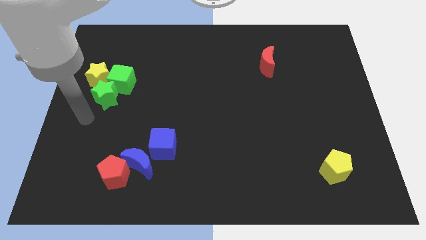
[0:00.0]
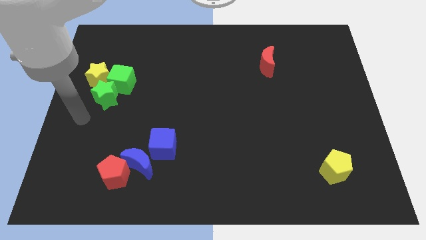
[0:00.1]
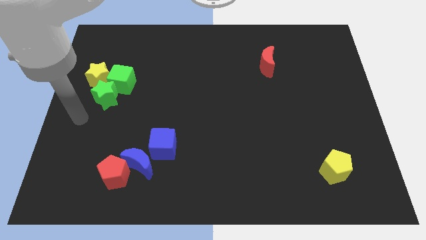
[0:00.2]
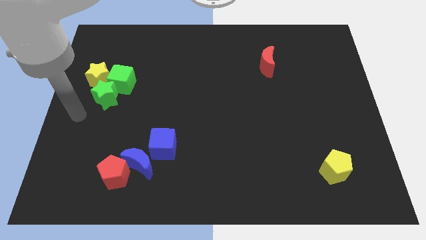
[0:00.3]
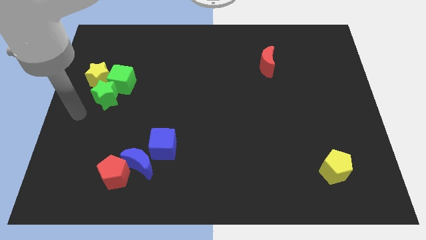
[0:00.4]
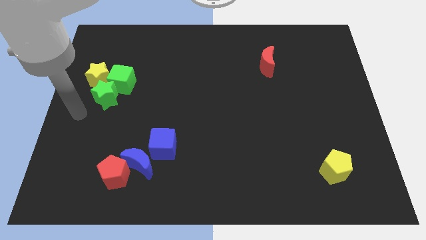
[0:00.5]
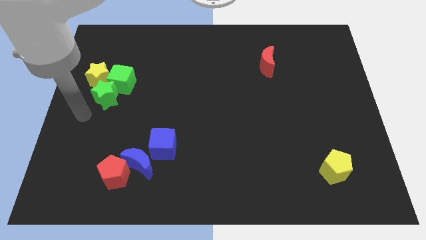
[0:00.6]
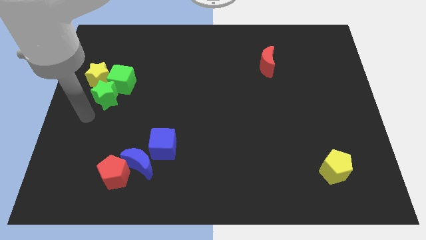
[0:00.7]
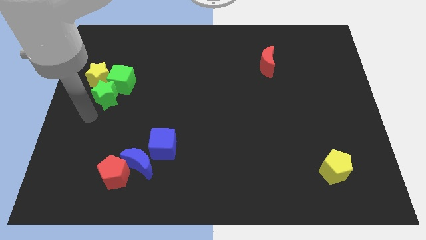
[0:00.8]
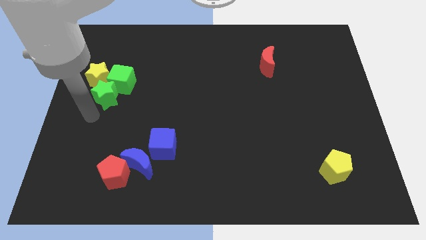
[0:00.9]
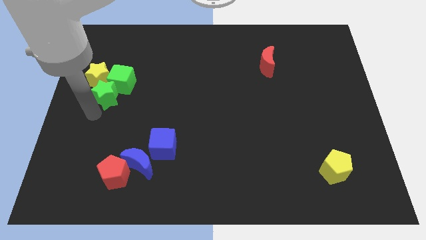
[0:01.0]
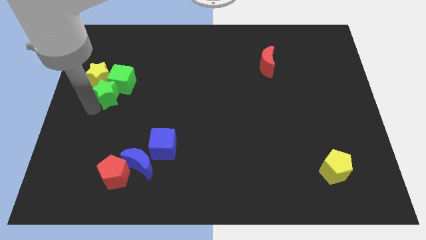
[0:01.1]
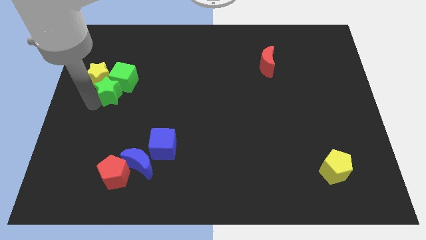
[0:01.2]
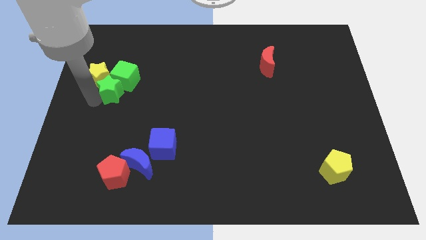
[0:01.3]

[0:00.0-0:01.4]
slide the green star into the green cube

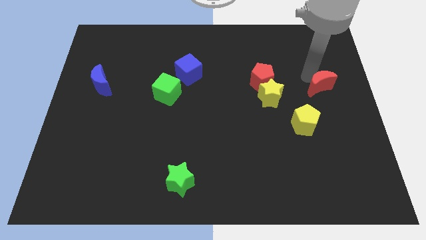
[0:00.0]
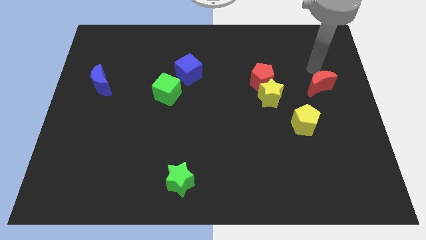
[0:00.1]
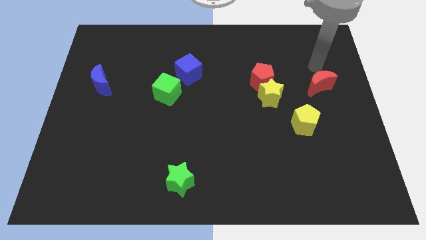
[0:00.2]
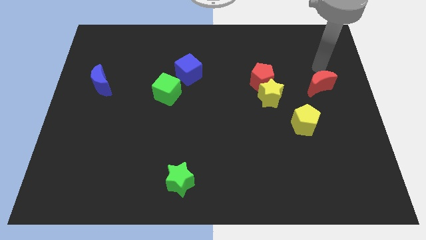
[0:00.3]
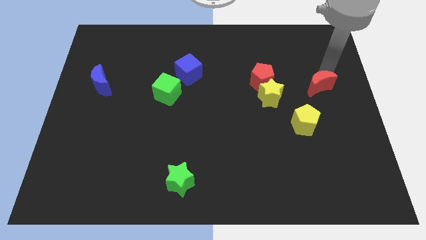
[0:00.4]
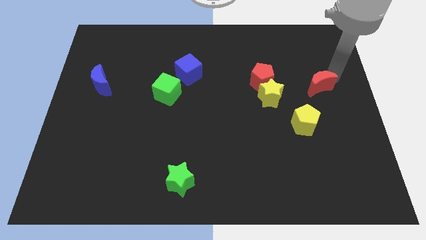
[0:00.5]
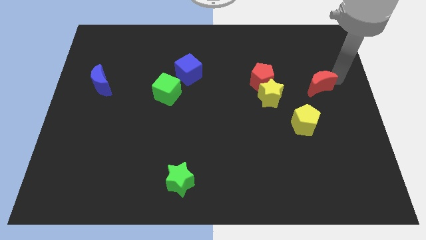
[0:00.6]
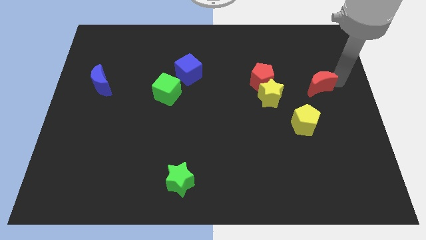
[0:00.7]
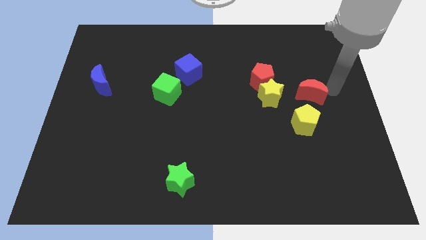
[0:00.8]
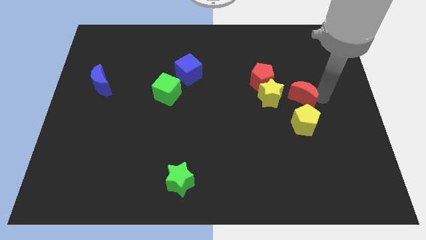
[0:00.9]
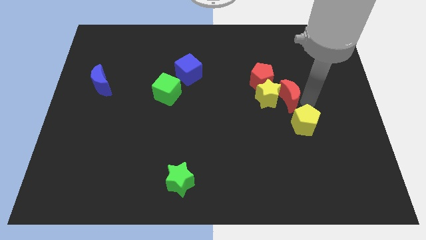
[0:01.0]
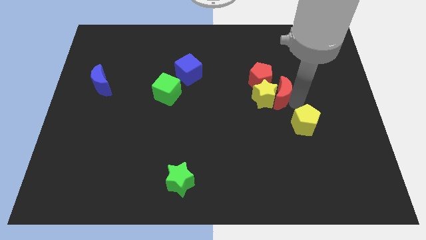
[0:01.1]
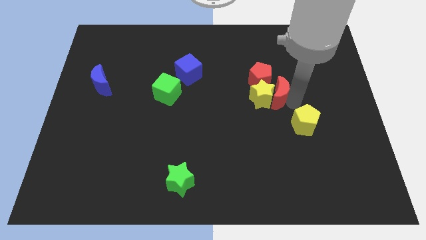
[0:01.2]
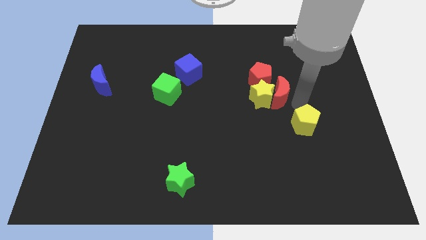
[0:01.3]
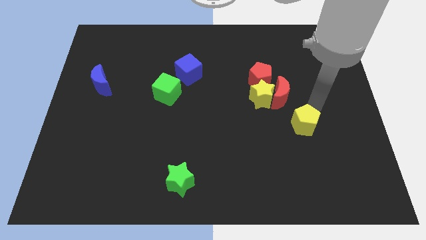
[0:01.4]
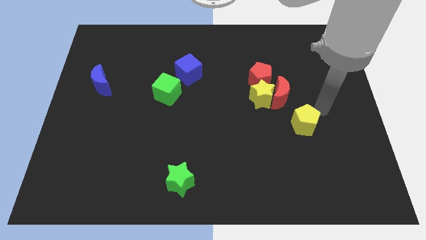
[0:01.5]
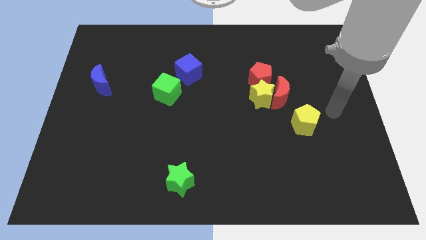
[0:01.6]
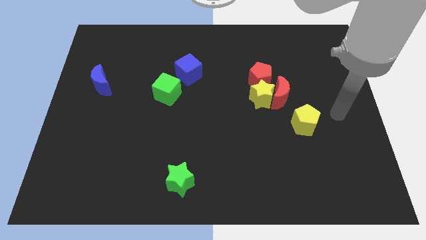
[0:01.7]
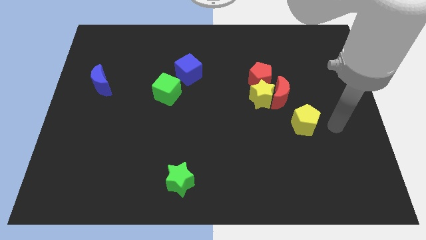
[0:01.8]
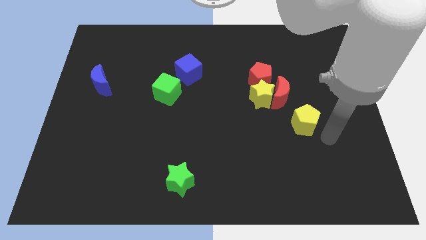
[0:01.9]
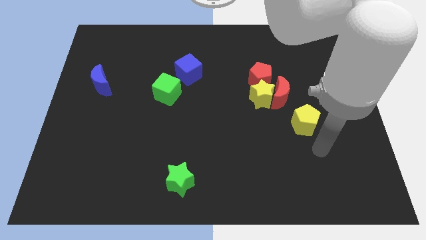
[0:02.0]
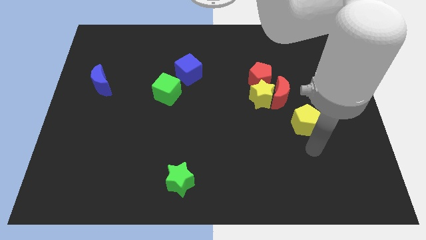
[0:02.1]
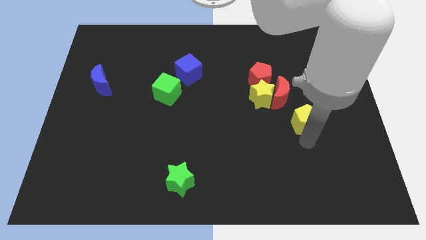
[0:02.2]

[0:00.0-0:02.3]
place the red moon to the right of the yellow star and red pentagon

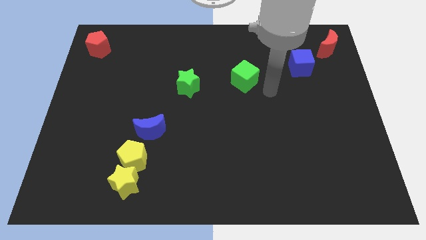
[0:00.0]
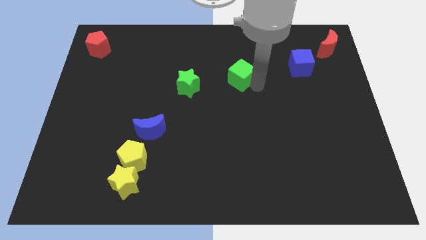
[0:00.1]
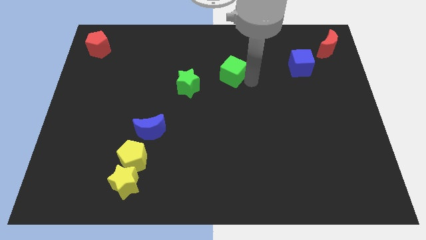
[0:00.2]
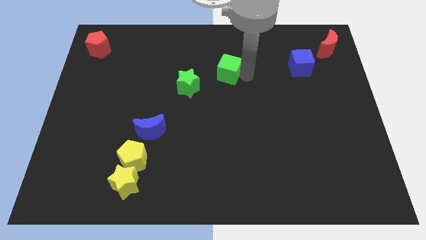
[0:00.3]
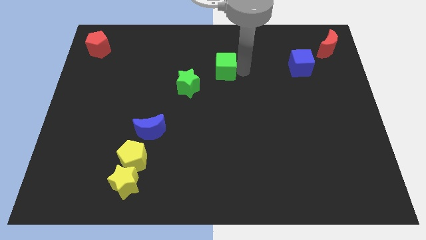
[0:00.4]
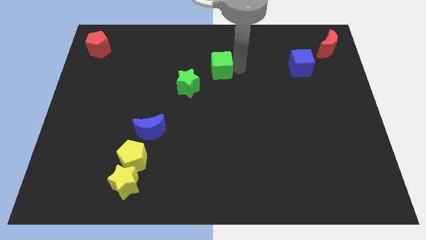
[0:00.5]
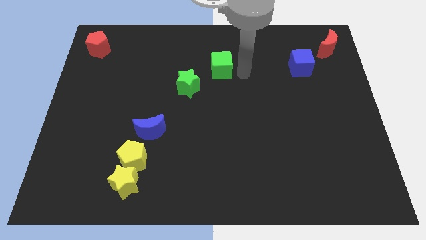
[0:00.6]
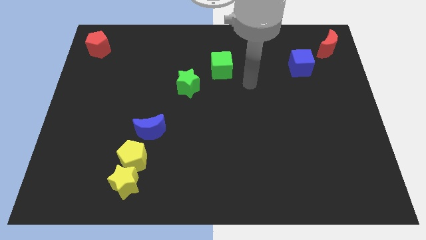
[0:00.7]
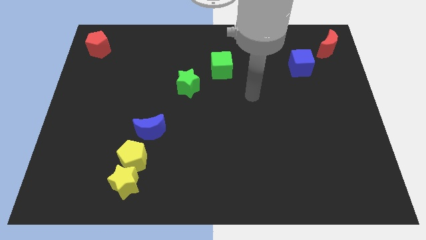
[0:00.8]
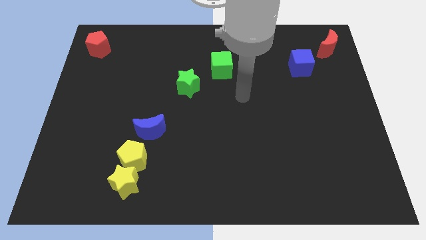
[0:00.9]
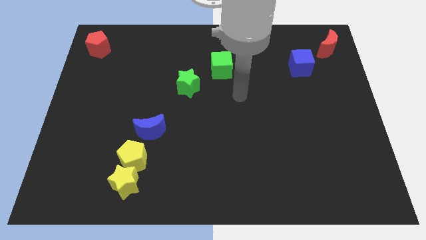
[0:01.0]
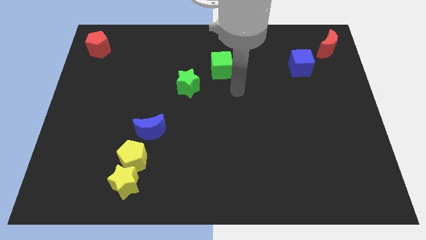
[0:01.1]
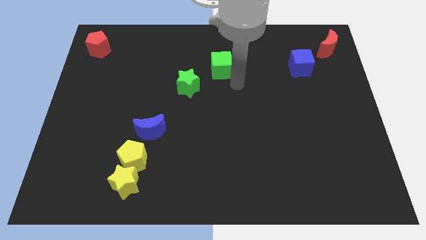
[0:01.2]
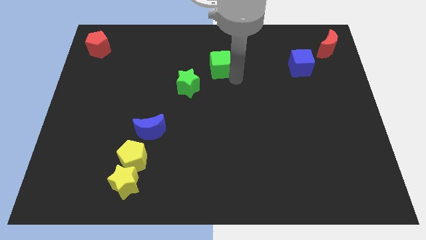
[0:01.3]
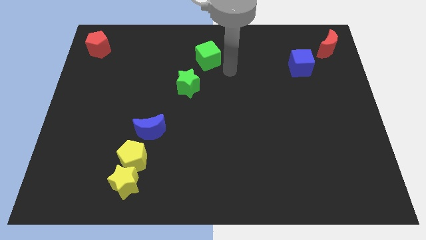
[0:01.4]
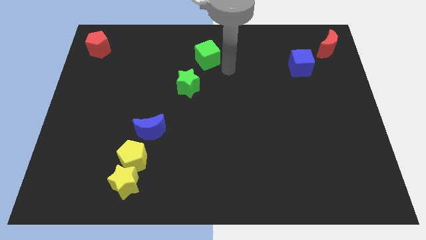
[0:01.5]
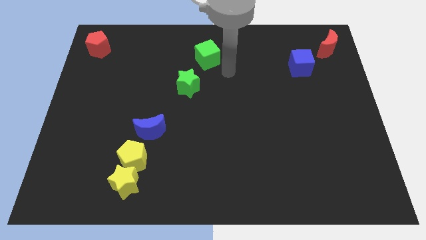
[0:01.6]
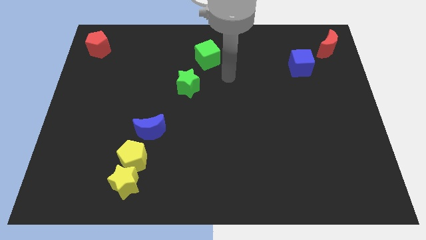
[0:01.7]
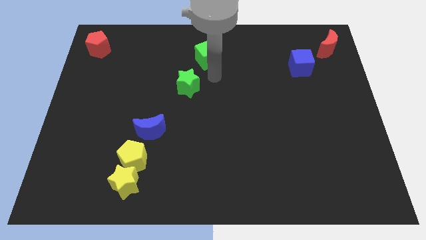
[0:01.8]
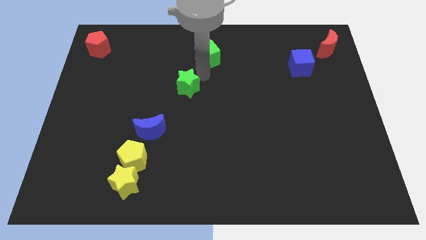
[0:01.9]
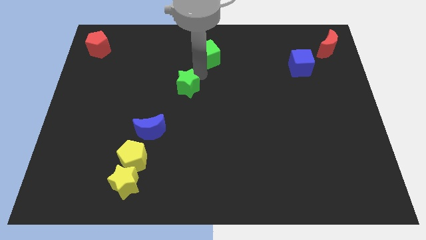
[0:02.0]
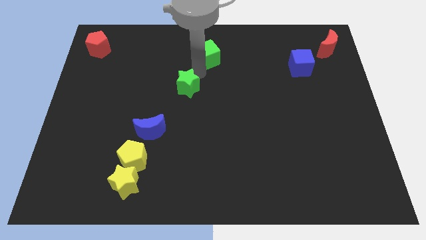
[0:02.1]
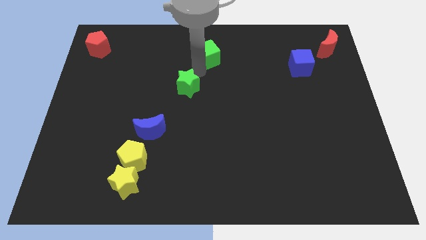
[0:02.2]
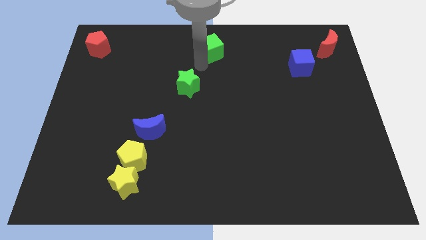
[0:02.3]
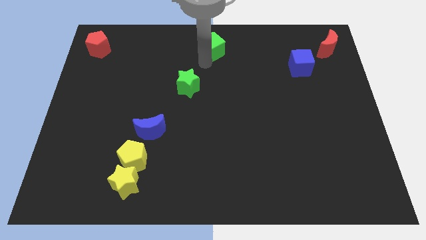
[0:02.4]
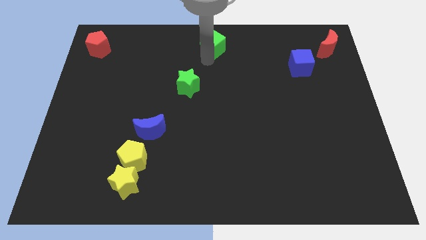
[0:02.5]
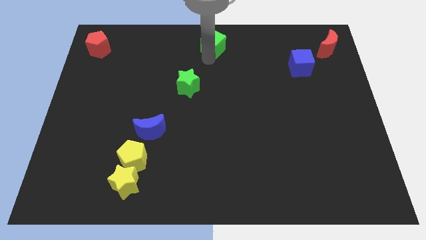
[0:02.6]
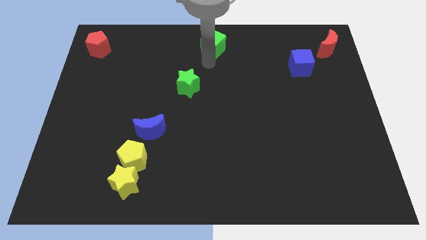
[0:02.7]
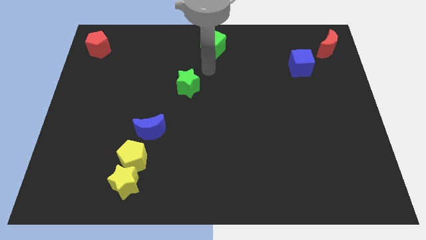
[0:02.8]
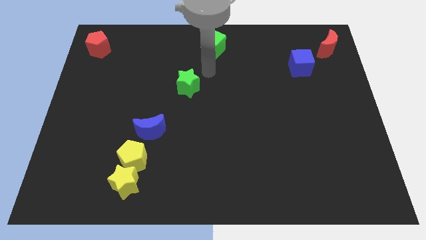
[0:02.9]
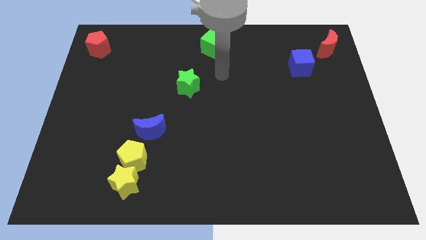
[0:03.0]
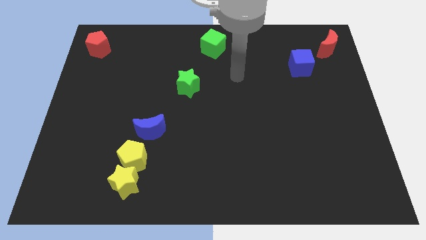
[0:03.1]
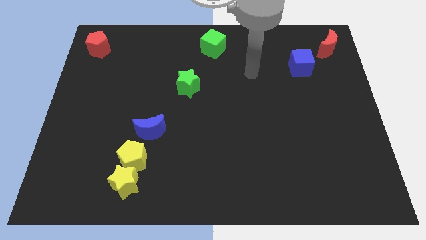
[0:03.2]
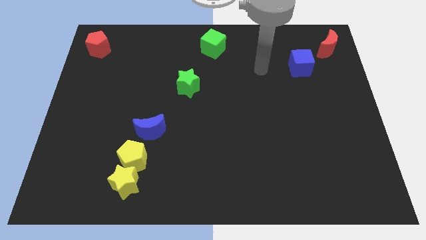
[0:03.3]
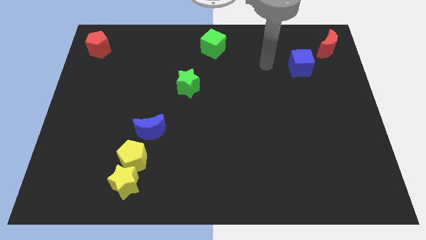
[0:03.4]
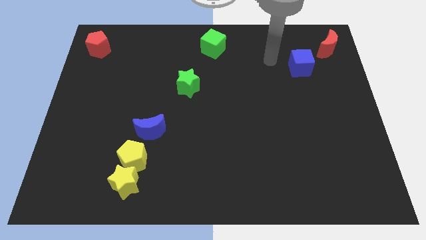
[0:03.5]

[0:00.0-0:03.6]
put the green cube at the top center

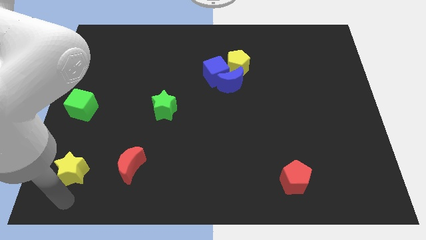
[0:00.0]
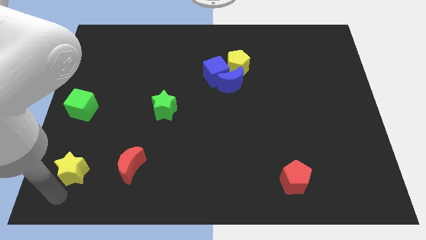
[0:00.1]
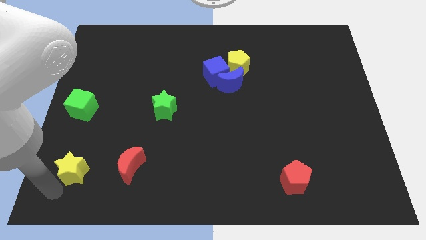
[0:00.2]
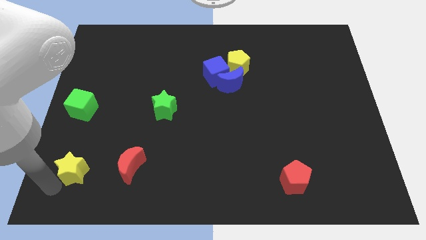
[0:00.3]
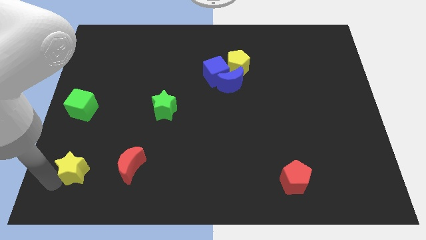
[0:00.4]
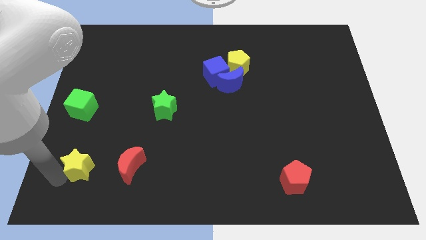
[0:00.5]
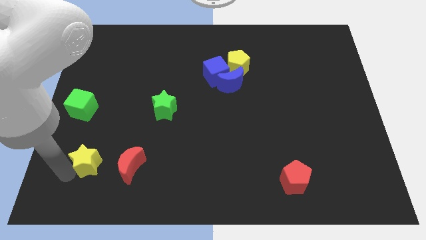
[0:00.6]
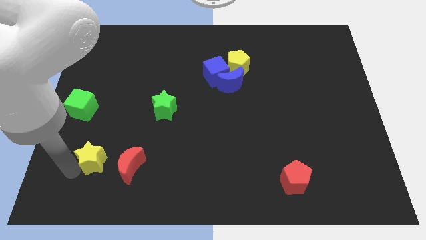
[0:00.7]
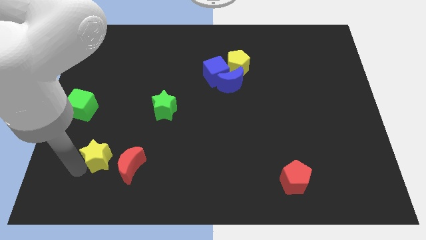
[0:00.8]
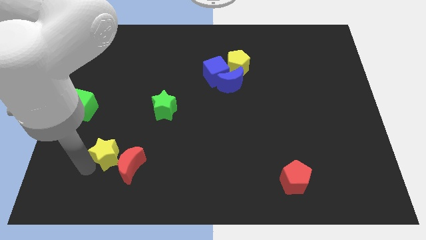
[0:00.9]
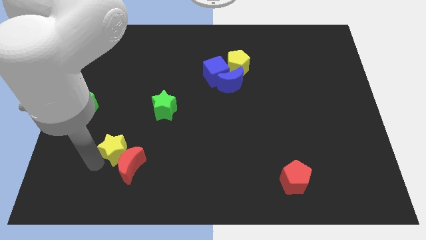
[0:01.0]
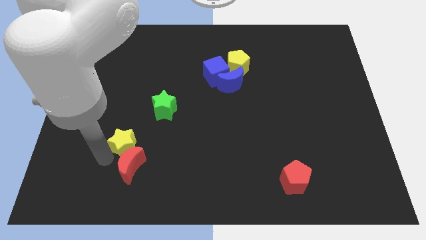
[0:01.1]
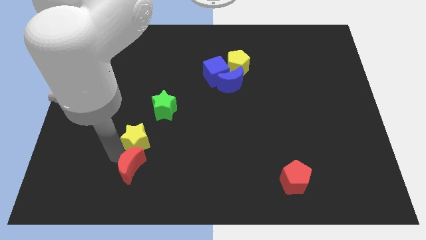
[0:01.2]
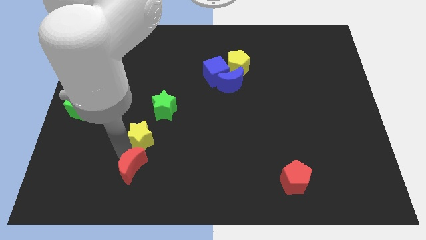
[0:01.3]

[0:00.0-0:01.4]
push the yellow star at the top of the red crescent

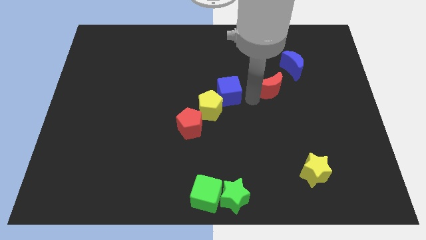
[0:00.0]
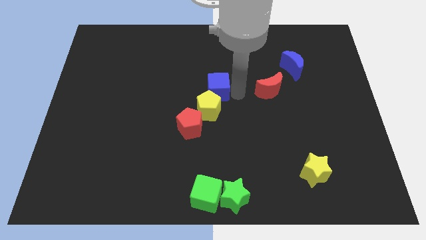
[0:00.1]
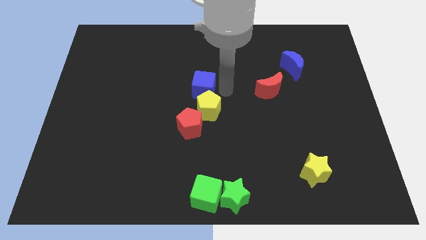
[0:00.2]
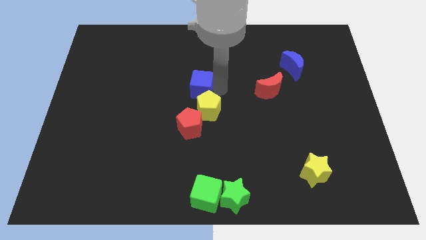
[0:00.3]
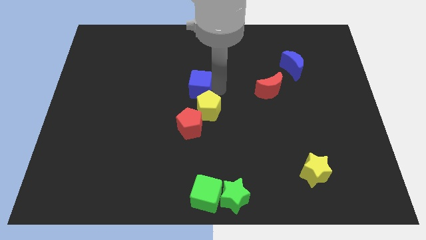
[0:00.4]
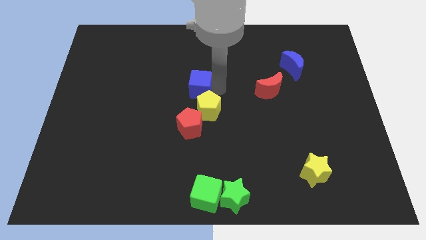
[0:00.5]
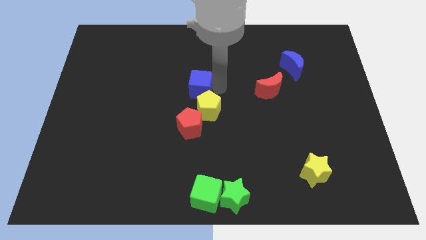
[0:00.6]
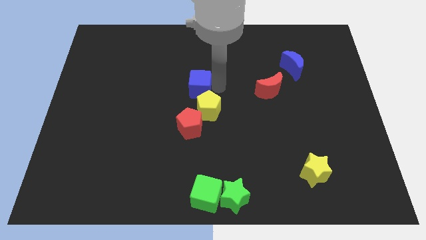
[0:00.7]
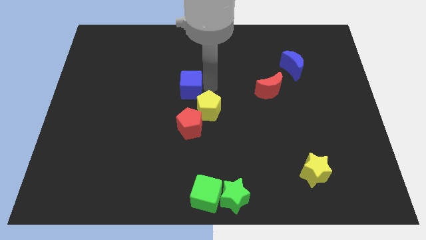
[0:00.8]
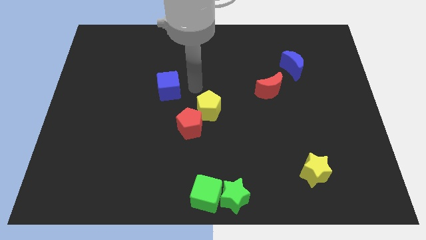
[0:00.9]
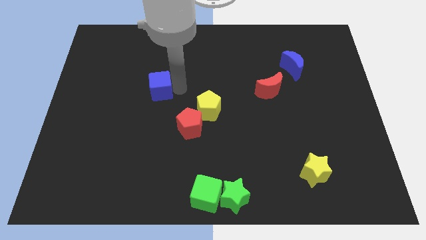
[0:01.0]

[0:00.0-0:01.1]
place the blue cube diagonally above the red pentagon
